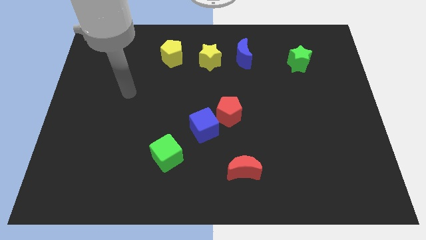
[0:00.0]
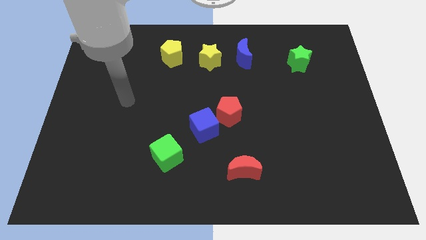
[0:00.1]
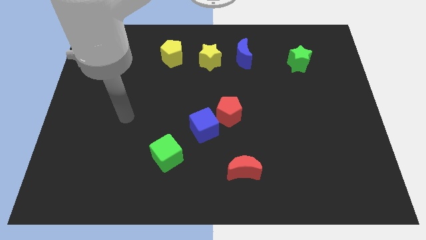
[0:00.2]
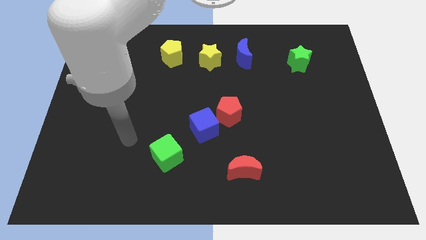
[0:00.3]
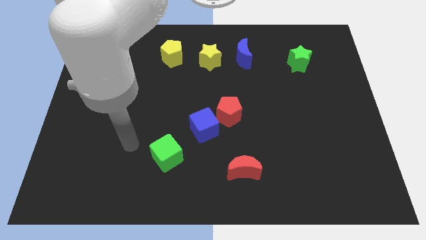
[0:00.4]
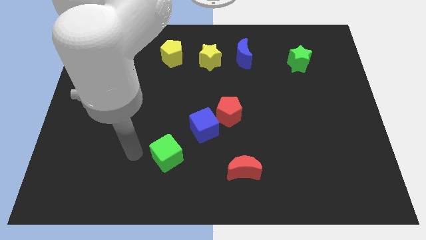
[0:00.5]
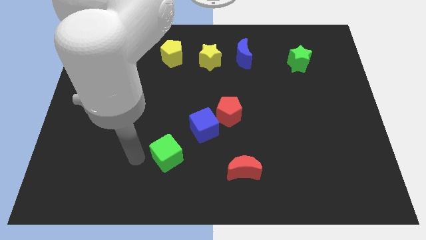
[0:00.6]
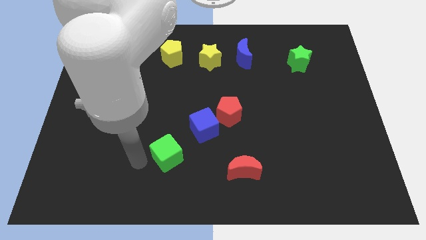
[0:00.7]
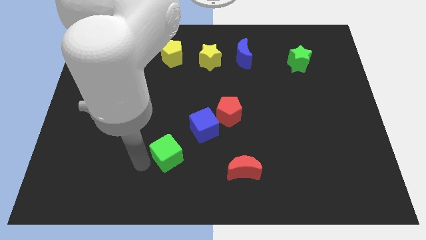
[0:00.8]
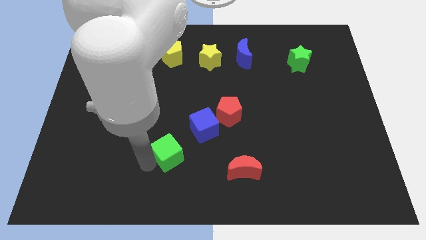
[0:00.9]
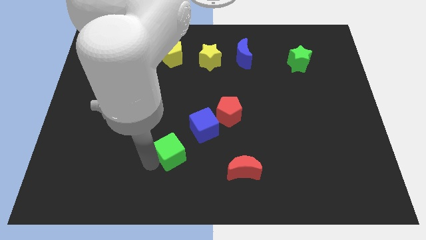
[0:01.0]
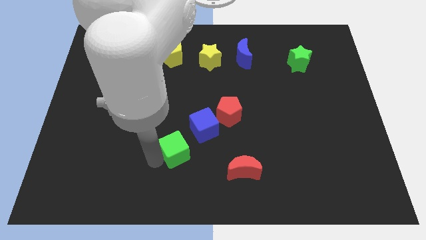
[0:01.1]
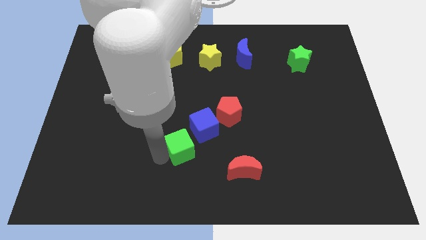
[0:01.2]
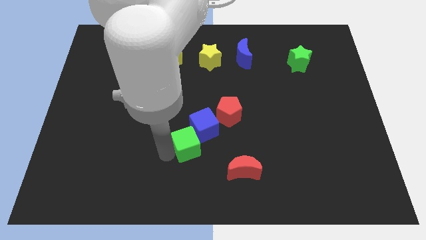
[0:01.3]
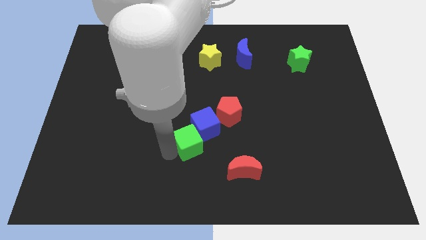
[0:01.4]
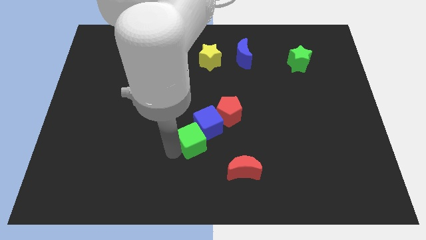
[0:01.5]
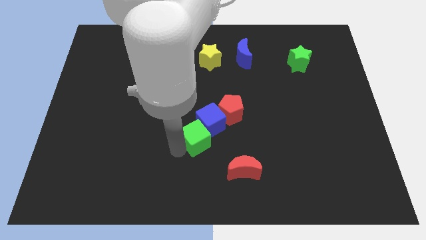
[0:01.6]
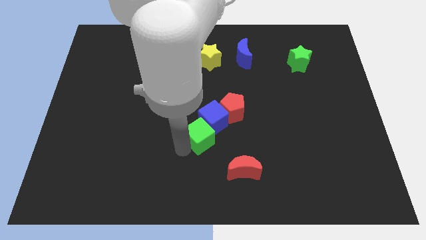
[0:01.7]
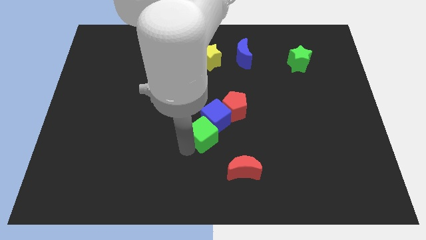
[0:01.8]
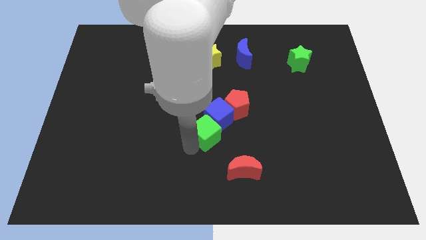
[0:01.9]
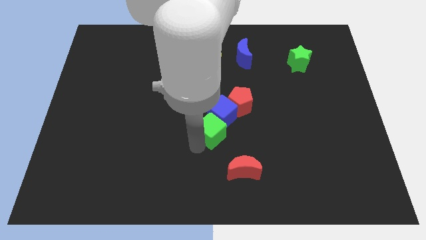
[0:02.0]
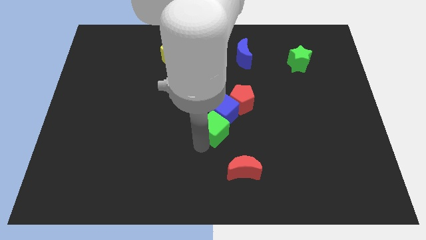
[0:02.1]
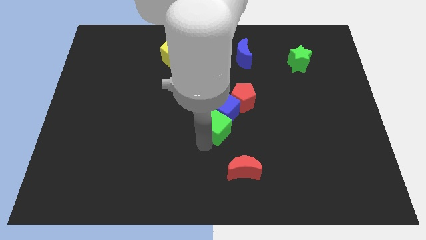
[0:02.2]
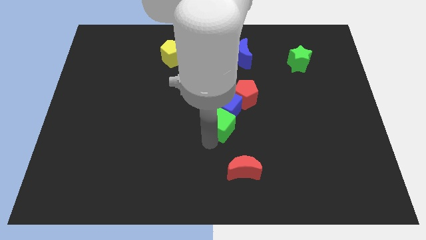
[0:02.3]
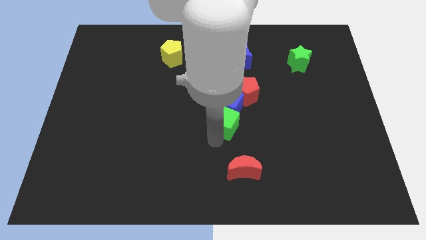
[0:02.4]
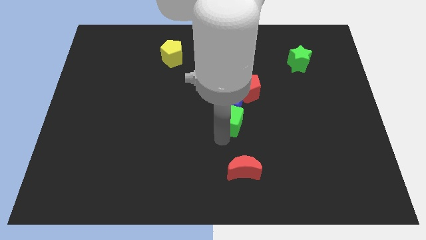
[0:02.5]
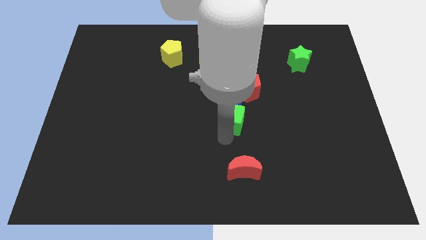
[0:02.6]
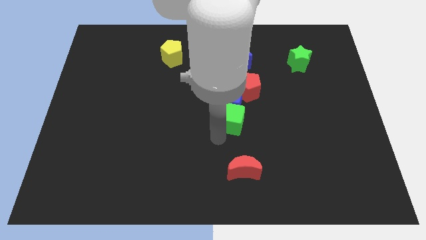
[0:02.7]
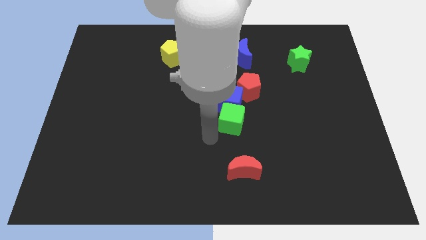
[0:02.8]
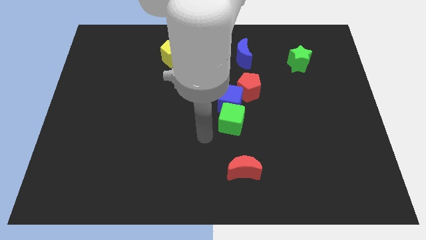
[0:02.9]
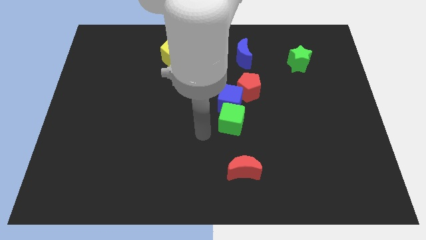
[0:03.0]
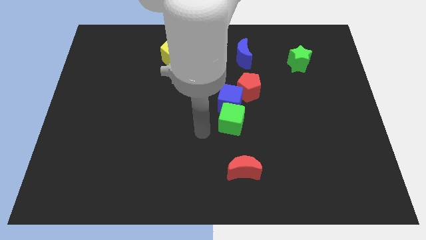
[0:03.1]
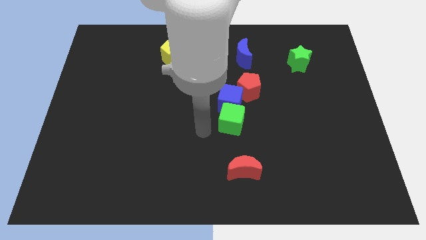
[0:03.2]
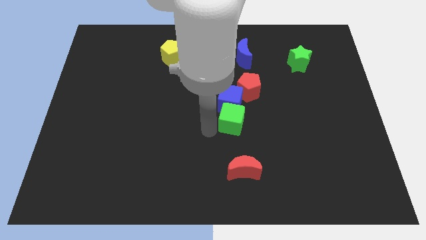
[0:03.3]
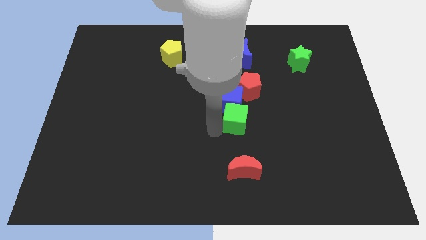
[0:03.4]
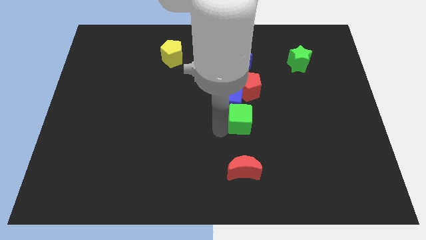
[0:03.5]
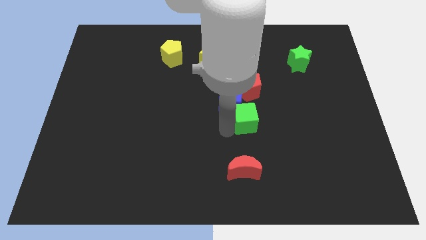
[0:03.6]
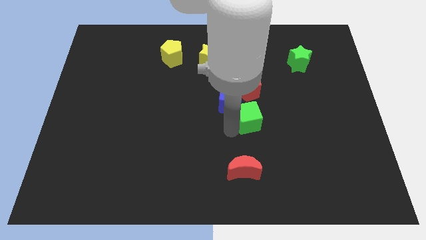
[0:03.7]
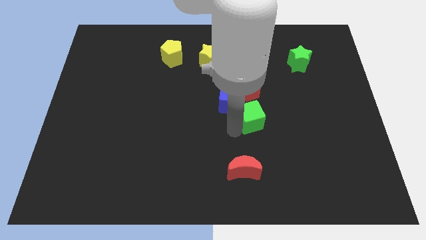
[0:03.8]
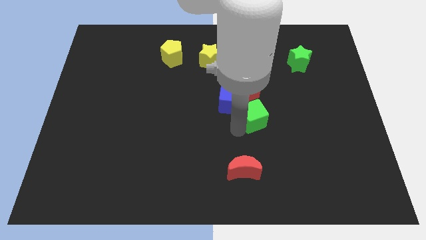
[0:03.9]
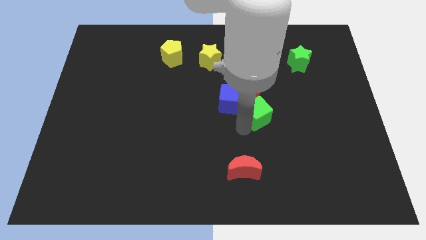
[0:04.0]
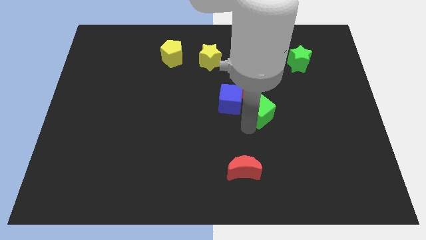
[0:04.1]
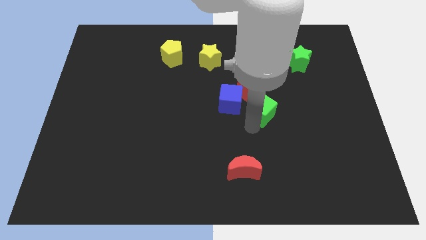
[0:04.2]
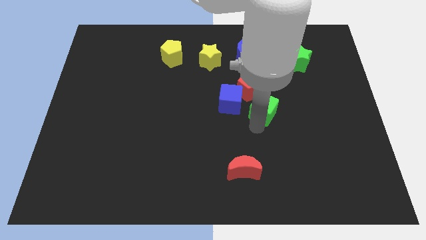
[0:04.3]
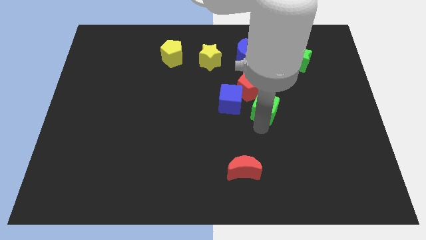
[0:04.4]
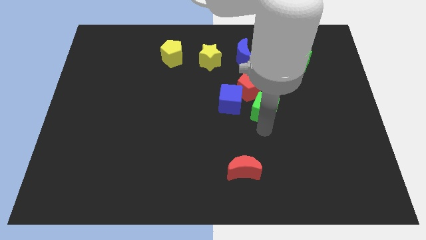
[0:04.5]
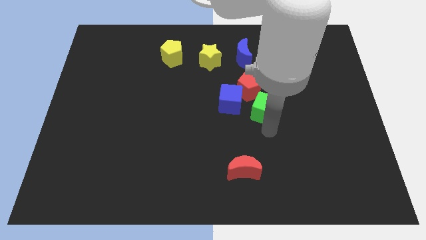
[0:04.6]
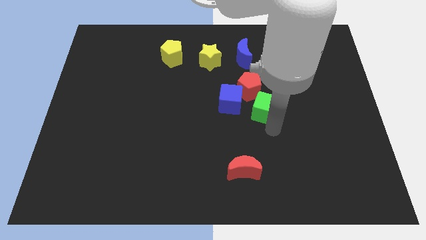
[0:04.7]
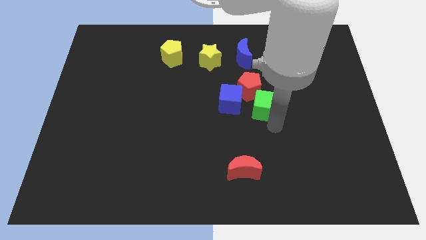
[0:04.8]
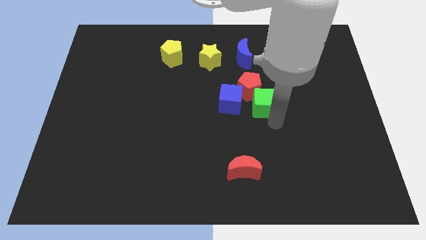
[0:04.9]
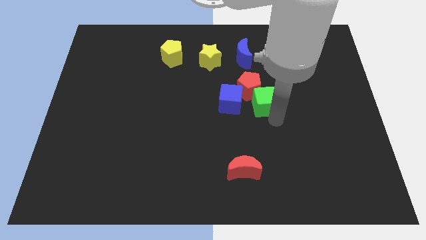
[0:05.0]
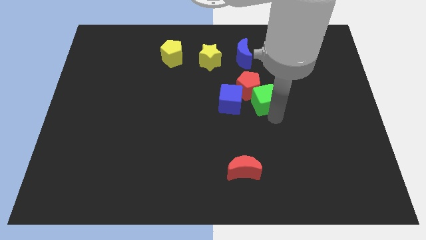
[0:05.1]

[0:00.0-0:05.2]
put the green cube to the red pentagon

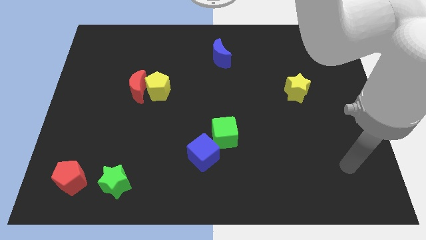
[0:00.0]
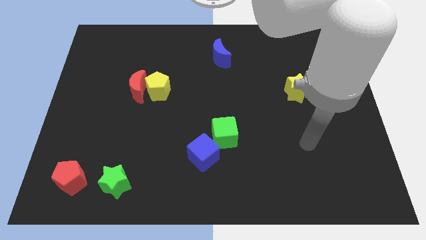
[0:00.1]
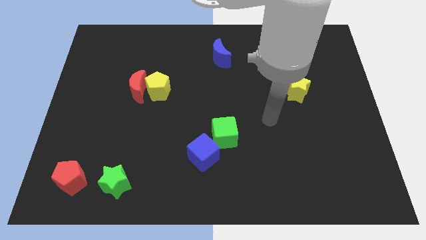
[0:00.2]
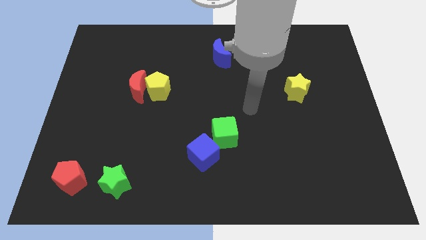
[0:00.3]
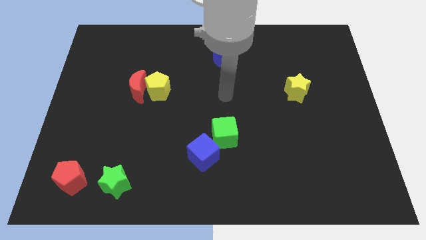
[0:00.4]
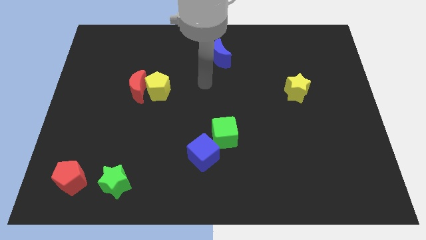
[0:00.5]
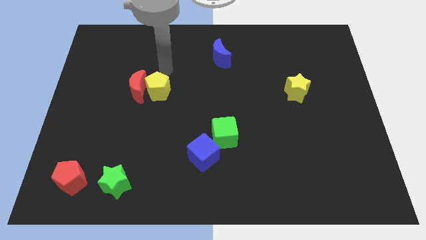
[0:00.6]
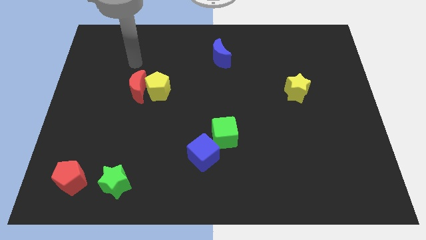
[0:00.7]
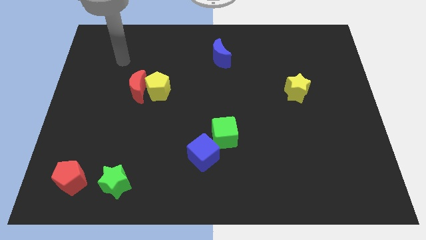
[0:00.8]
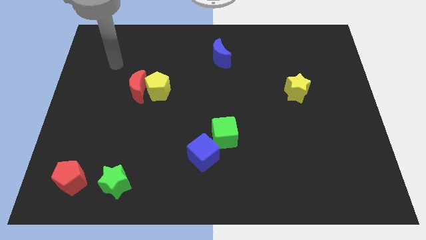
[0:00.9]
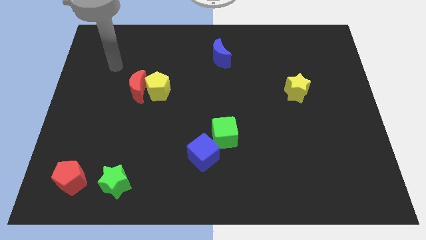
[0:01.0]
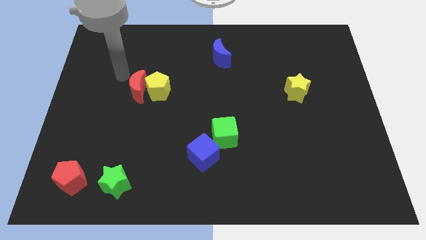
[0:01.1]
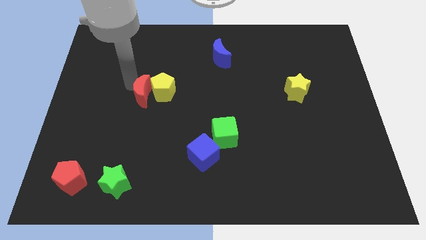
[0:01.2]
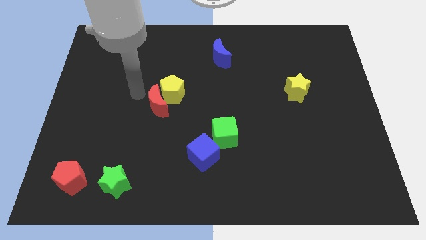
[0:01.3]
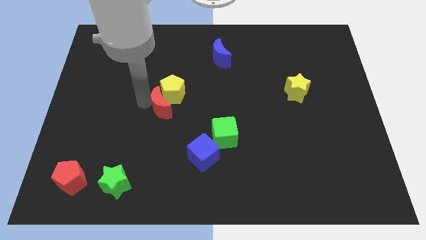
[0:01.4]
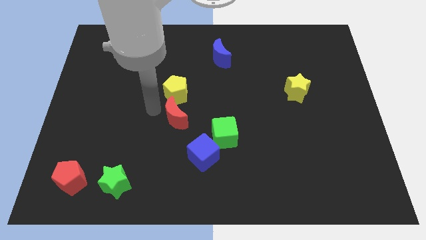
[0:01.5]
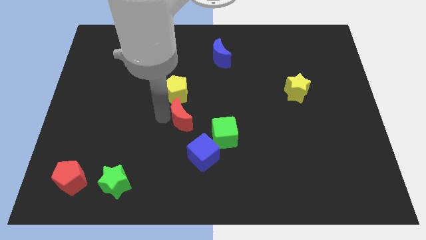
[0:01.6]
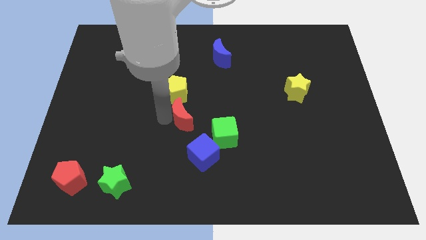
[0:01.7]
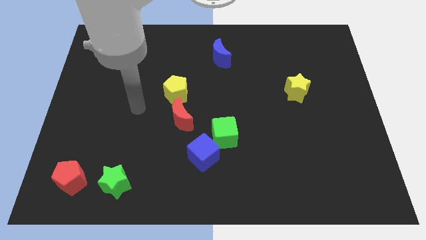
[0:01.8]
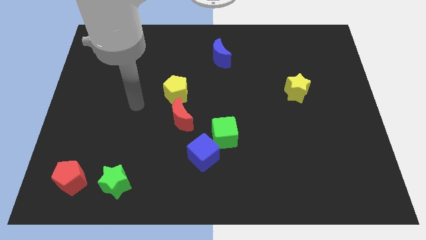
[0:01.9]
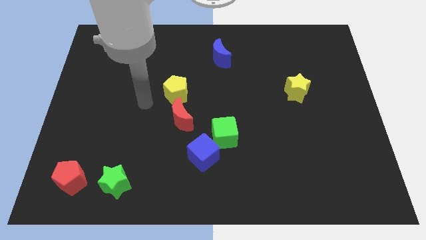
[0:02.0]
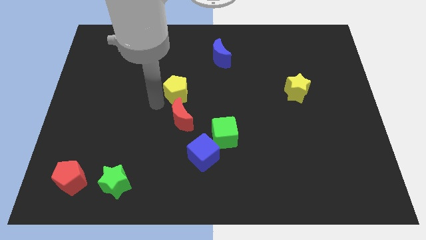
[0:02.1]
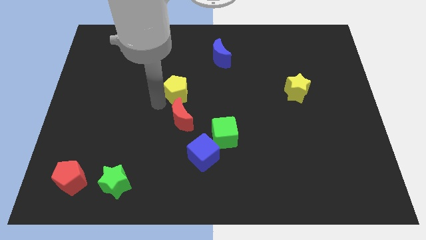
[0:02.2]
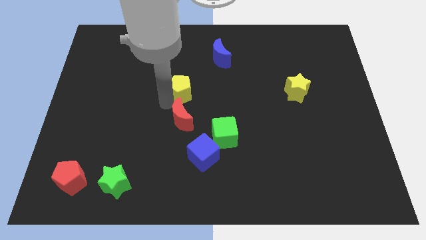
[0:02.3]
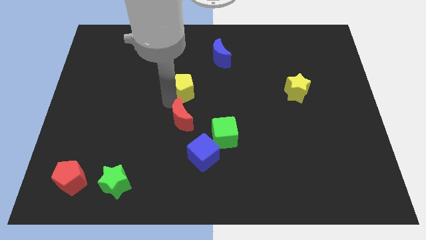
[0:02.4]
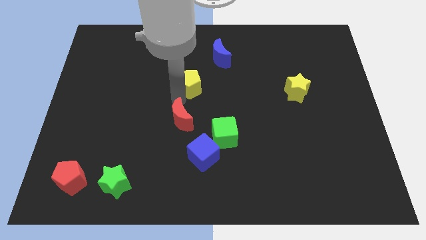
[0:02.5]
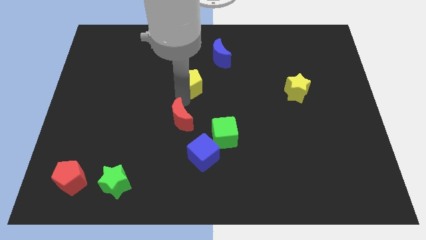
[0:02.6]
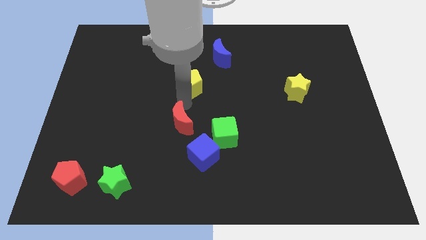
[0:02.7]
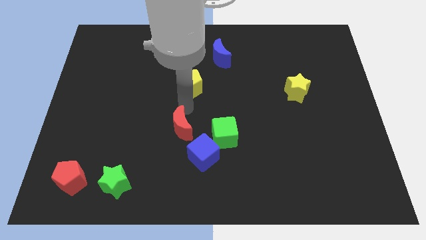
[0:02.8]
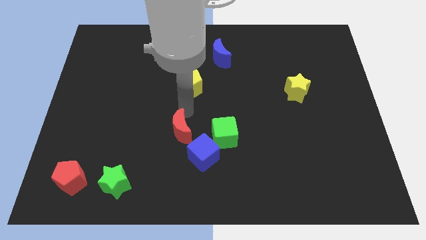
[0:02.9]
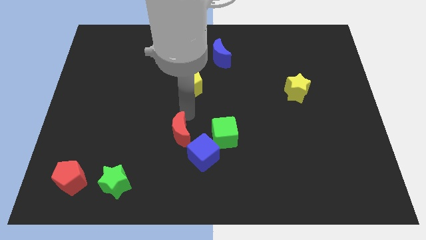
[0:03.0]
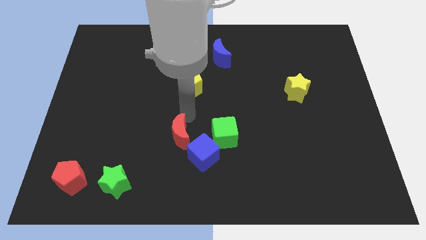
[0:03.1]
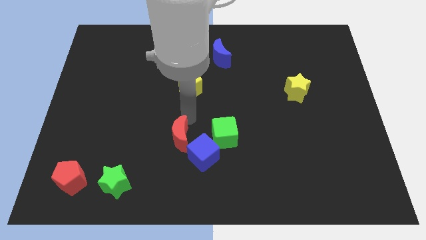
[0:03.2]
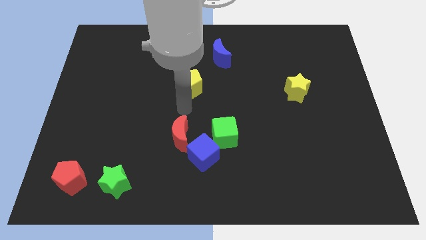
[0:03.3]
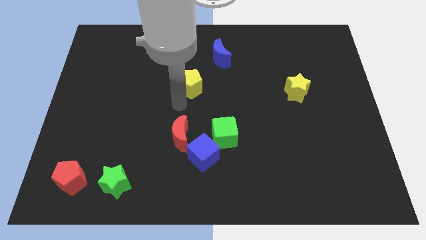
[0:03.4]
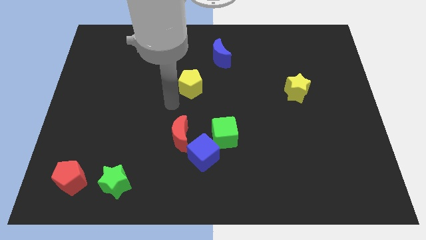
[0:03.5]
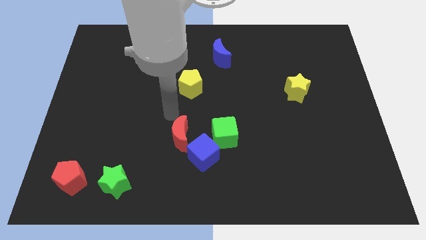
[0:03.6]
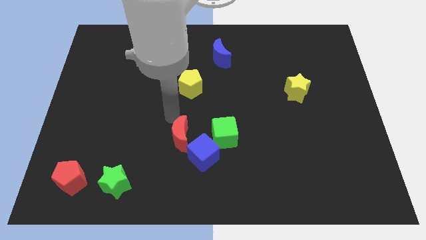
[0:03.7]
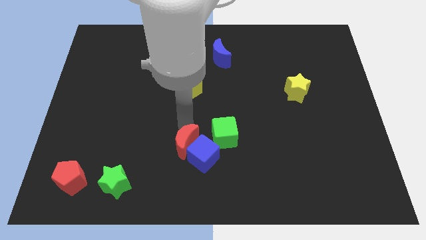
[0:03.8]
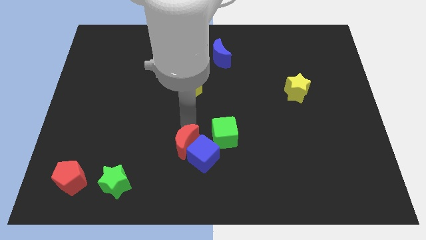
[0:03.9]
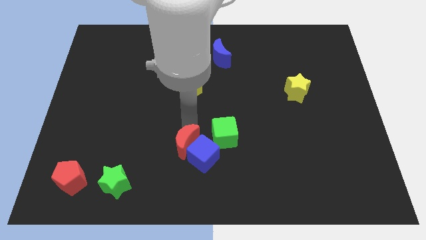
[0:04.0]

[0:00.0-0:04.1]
push the red moon to the blue cube
